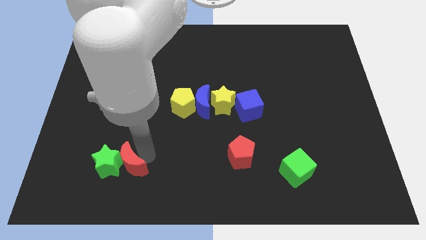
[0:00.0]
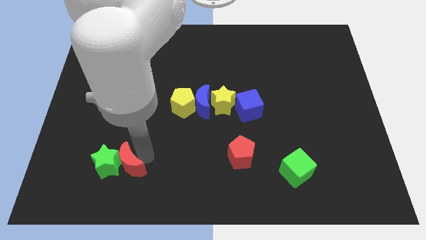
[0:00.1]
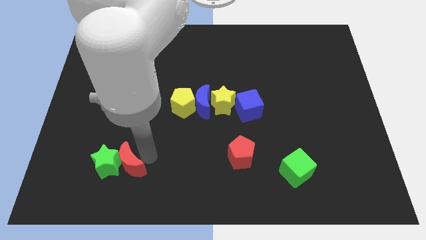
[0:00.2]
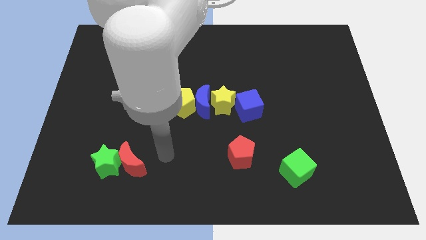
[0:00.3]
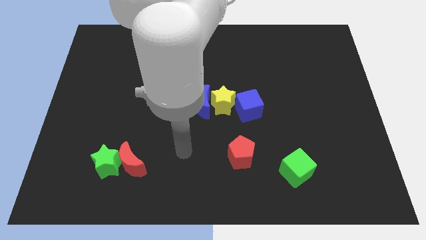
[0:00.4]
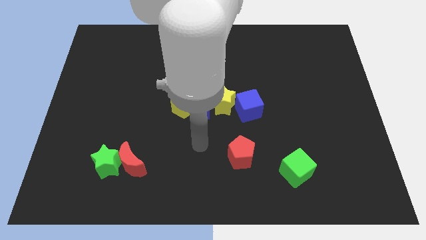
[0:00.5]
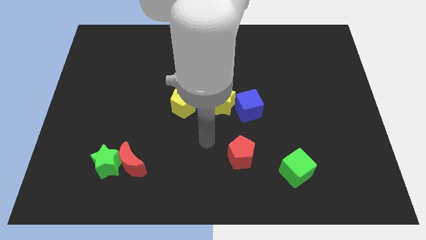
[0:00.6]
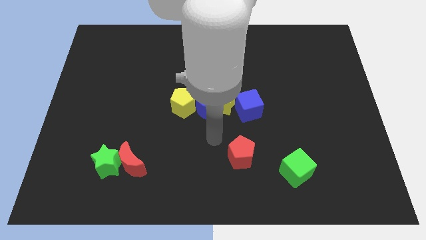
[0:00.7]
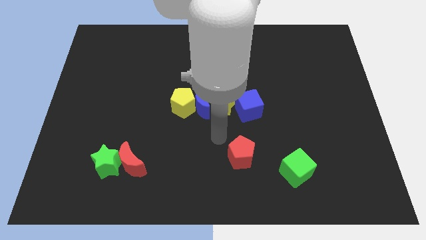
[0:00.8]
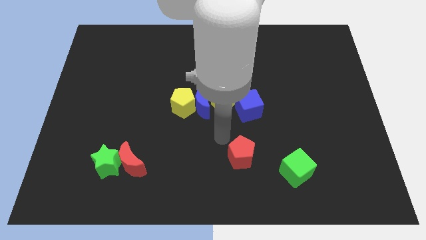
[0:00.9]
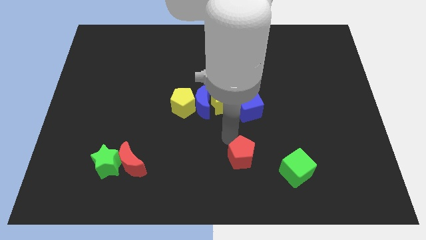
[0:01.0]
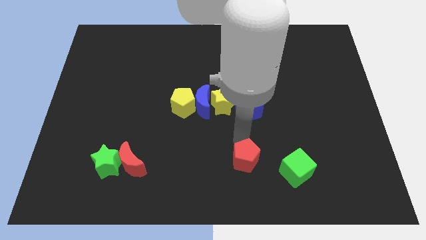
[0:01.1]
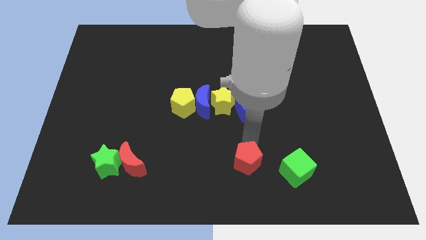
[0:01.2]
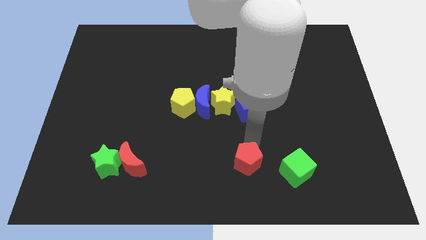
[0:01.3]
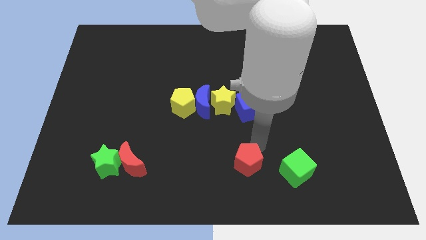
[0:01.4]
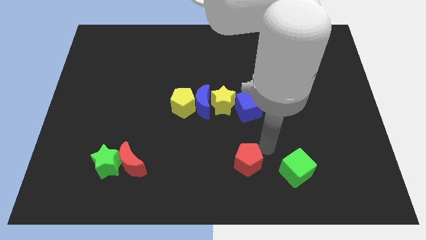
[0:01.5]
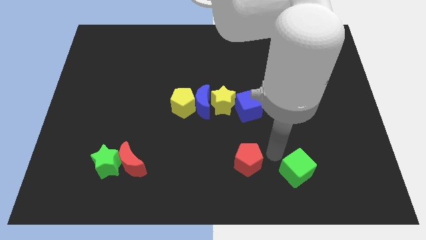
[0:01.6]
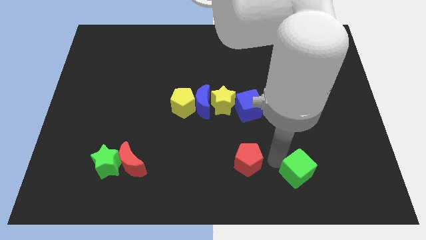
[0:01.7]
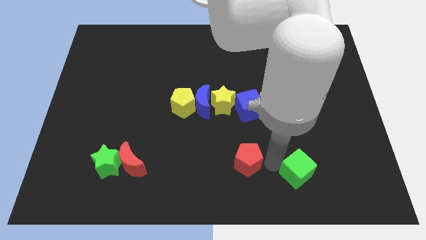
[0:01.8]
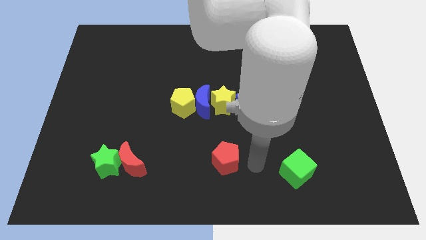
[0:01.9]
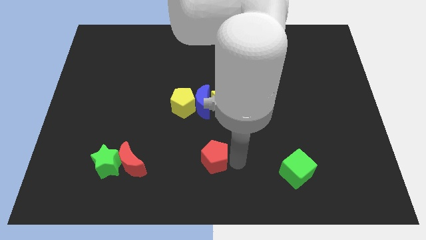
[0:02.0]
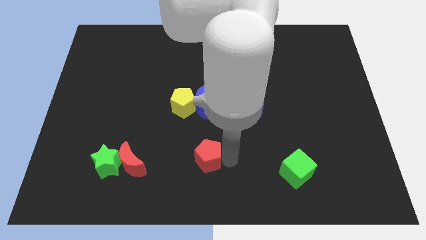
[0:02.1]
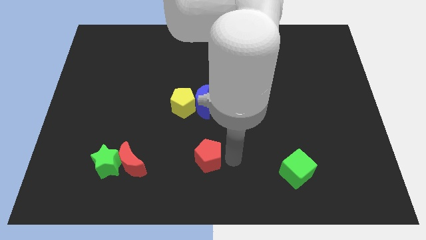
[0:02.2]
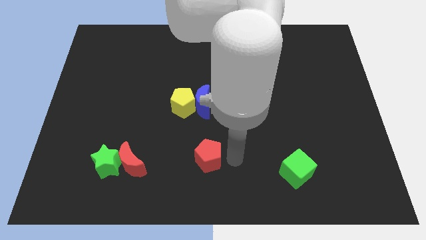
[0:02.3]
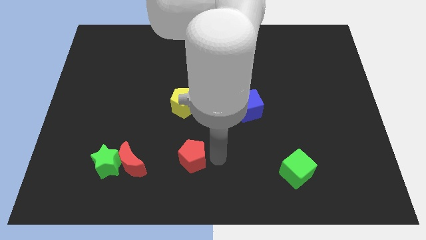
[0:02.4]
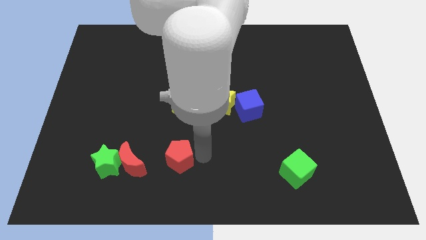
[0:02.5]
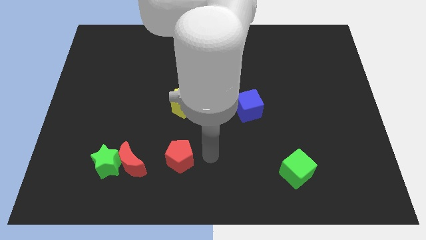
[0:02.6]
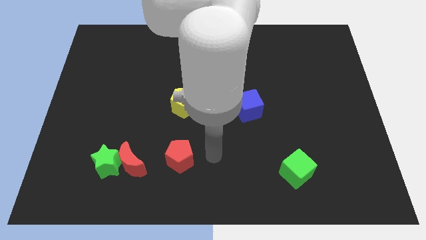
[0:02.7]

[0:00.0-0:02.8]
move the red pentagon towards the red crescent

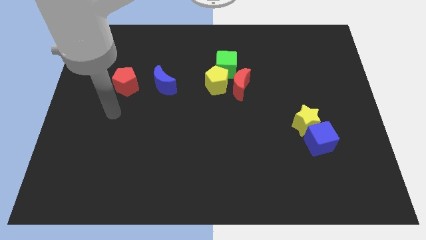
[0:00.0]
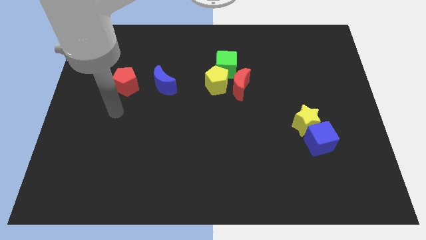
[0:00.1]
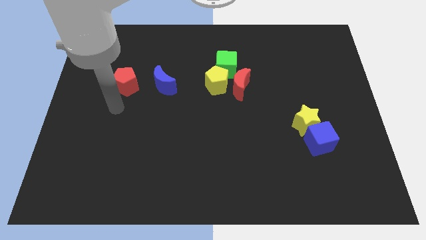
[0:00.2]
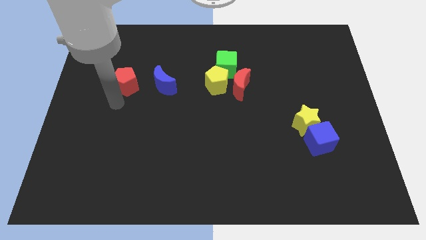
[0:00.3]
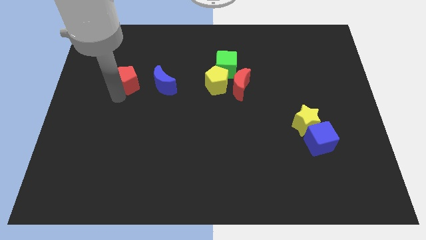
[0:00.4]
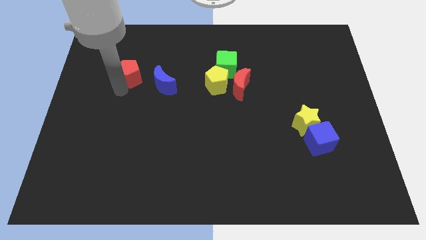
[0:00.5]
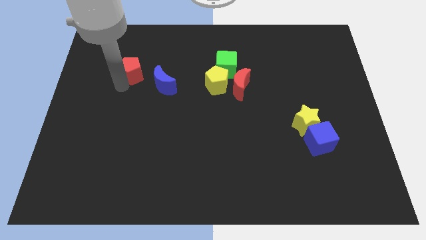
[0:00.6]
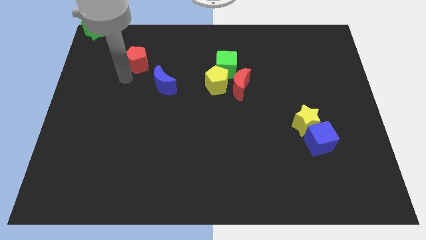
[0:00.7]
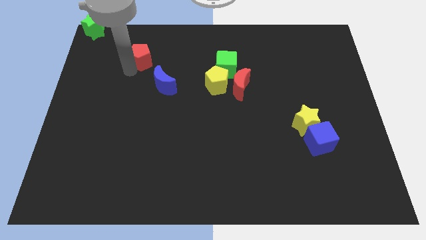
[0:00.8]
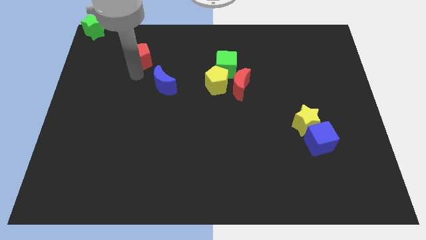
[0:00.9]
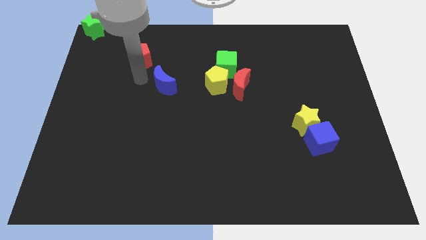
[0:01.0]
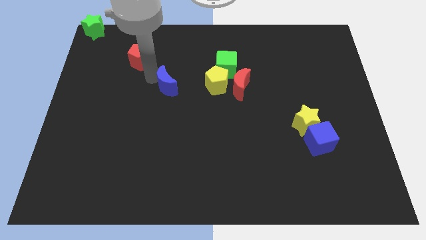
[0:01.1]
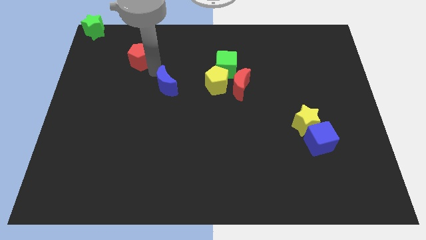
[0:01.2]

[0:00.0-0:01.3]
push the red pentagon to the top of the board

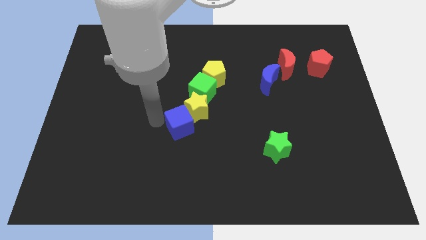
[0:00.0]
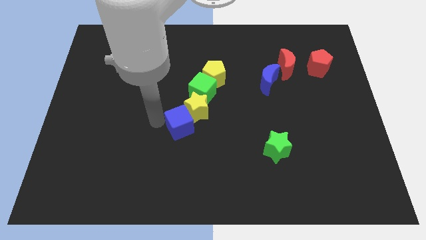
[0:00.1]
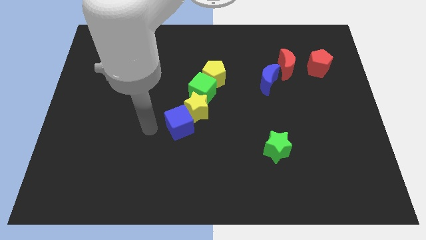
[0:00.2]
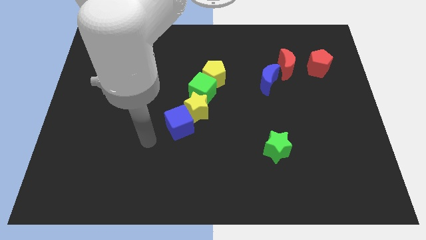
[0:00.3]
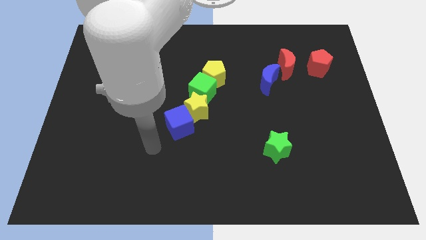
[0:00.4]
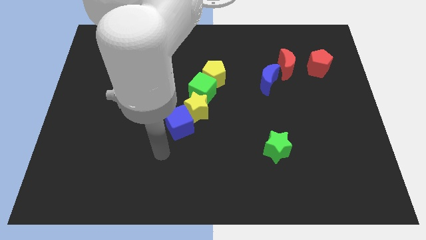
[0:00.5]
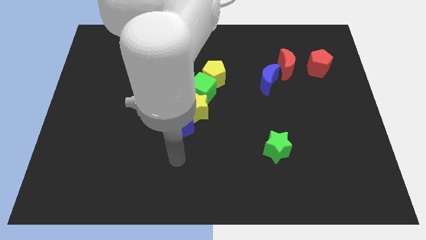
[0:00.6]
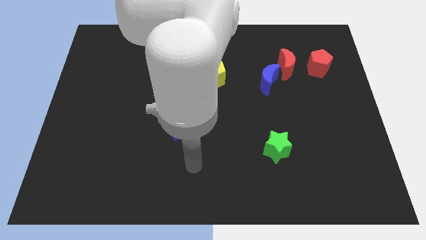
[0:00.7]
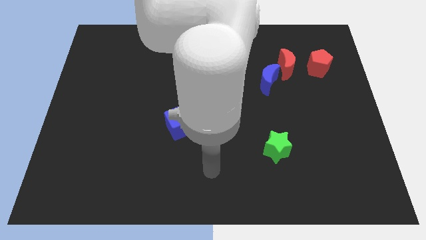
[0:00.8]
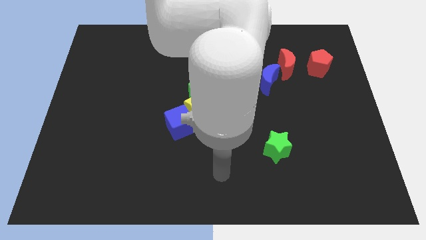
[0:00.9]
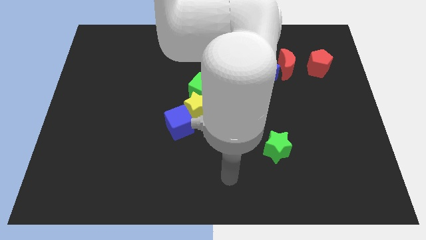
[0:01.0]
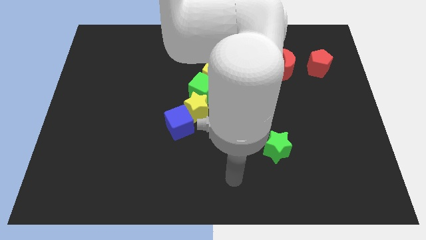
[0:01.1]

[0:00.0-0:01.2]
move your arm away from blue cube

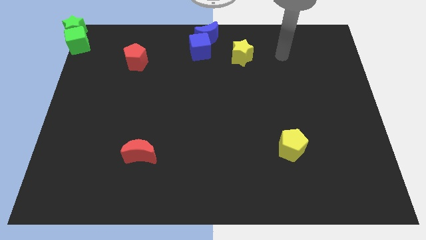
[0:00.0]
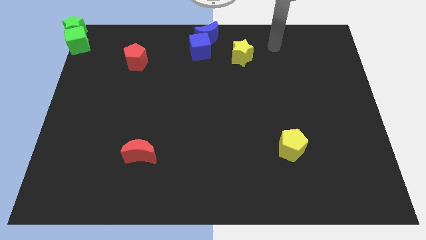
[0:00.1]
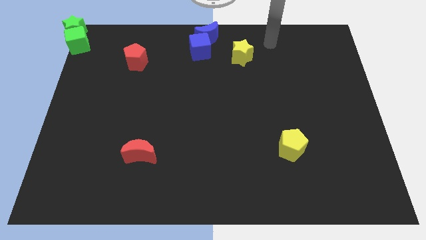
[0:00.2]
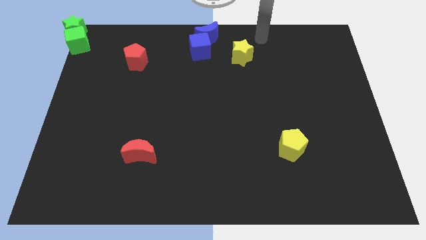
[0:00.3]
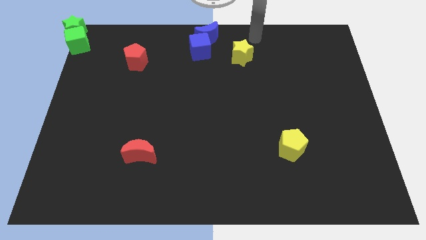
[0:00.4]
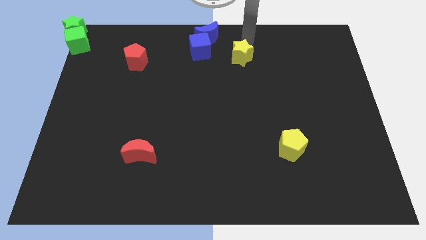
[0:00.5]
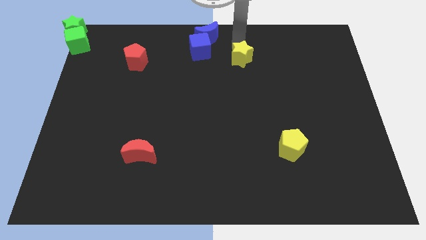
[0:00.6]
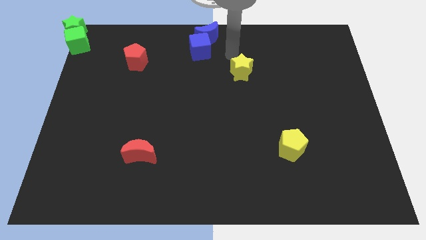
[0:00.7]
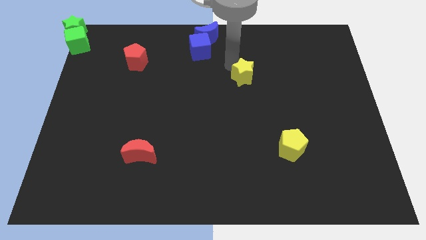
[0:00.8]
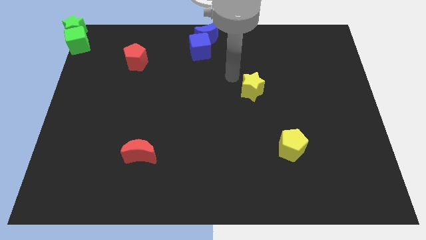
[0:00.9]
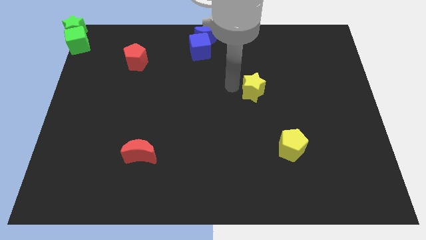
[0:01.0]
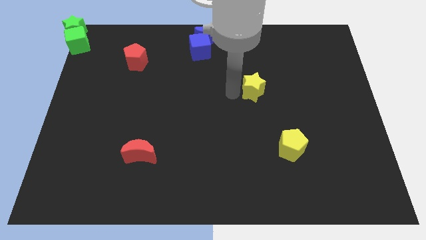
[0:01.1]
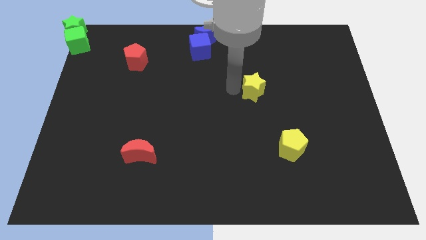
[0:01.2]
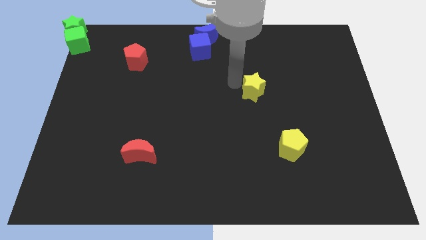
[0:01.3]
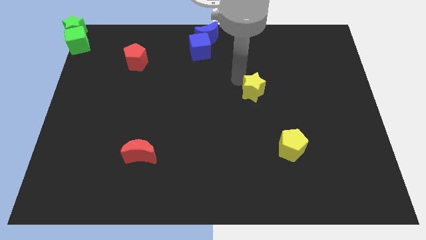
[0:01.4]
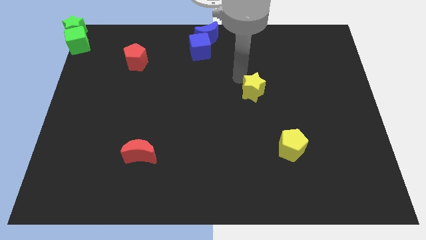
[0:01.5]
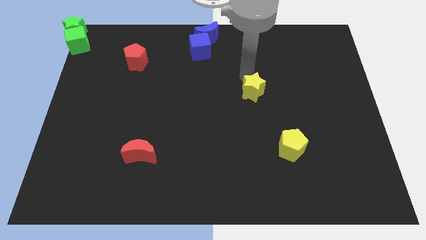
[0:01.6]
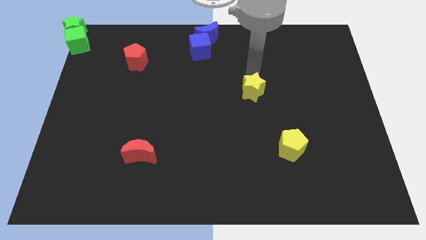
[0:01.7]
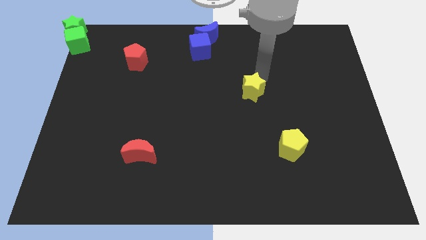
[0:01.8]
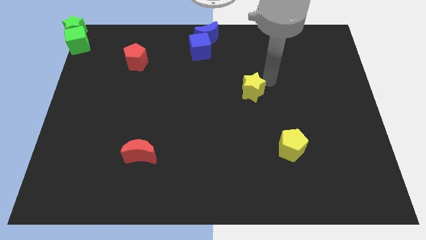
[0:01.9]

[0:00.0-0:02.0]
push the yellow star towards the bottom

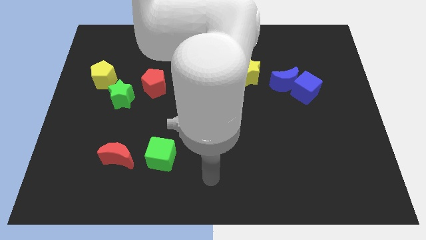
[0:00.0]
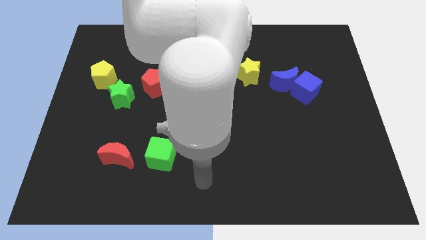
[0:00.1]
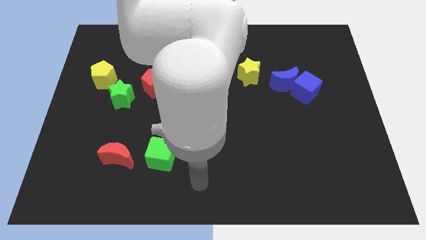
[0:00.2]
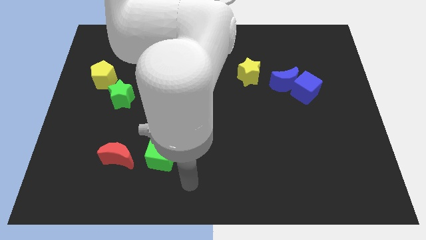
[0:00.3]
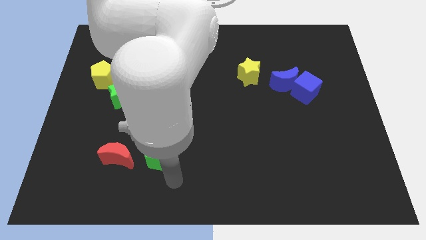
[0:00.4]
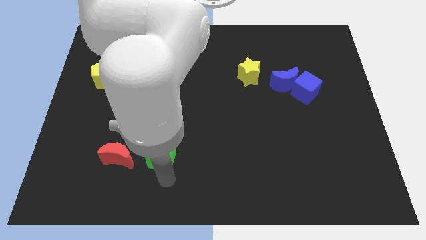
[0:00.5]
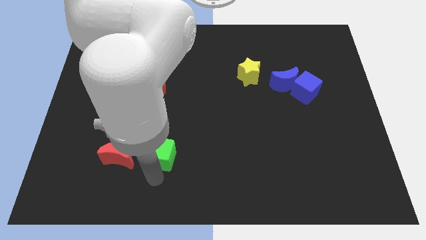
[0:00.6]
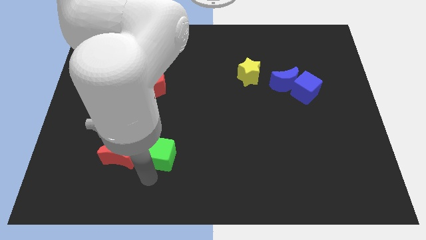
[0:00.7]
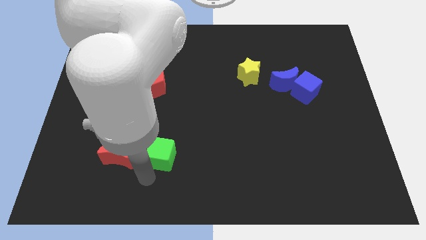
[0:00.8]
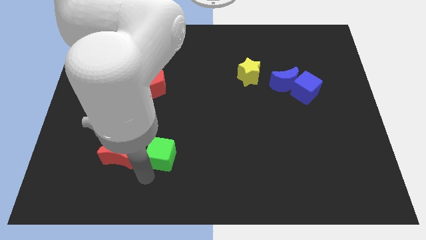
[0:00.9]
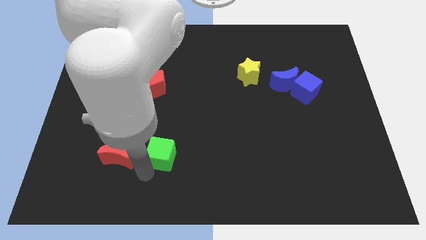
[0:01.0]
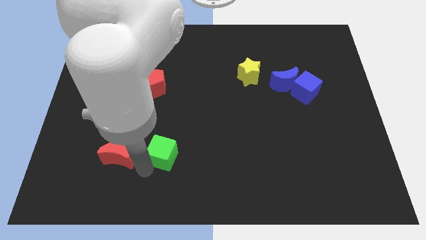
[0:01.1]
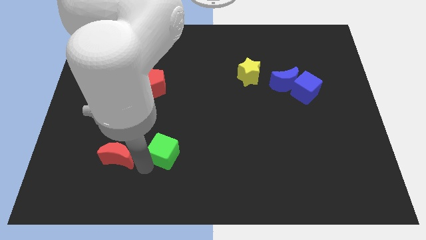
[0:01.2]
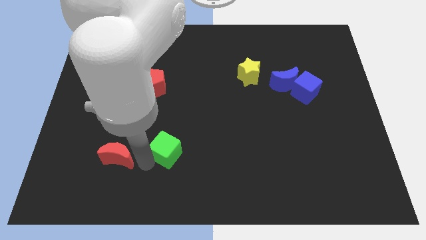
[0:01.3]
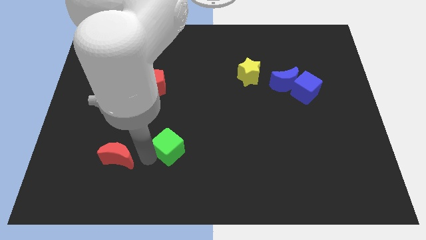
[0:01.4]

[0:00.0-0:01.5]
place your arm in between the red moon and green cube
